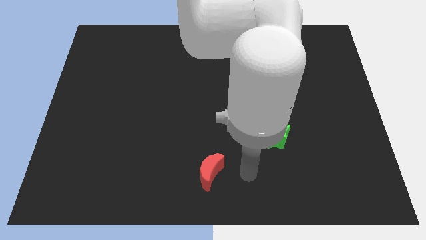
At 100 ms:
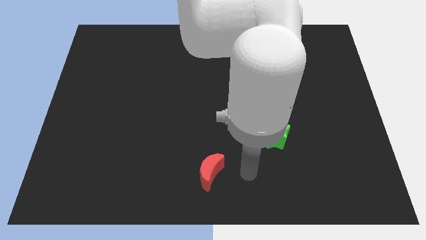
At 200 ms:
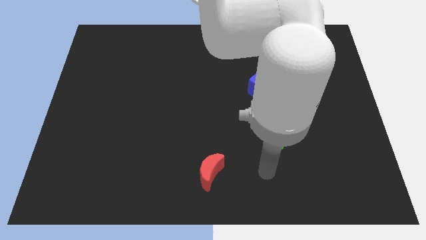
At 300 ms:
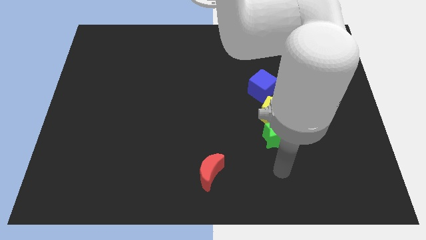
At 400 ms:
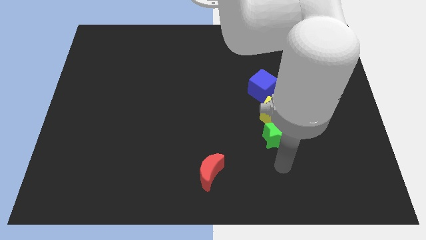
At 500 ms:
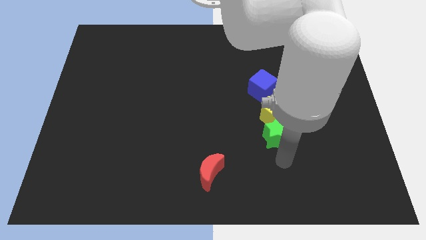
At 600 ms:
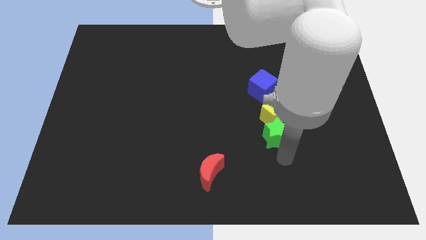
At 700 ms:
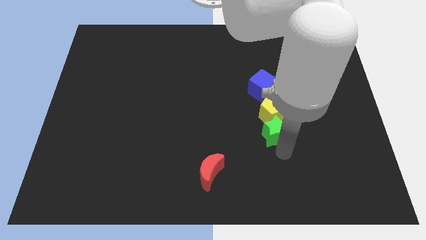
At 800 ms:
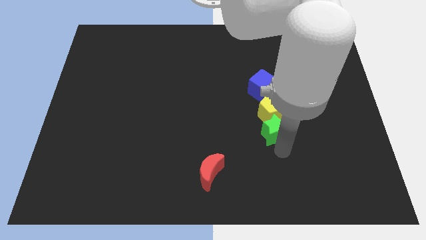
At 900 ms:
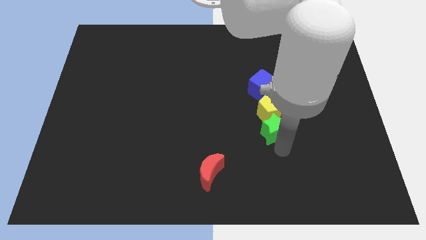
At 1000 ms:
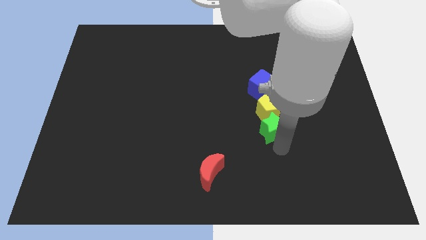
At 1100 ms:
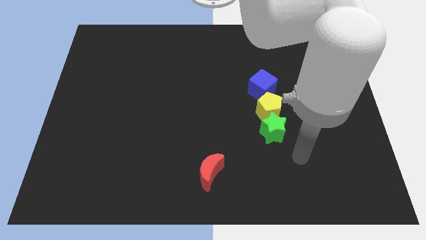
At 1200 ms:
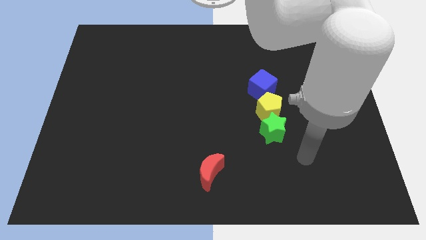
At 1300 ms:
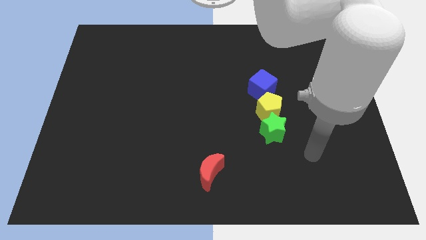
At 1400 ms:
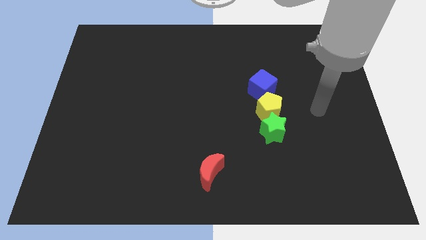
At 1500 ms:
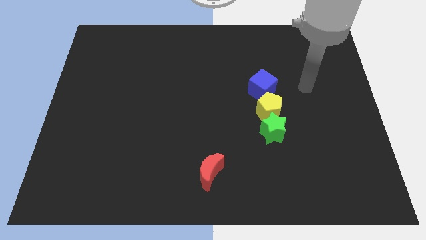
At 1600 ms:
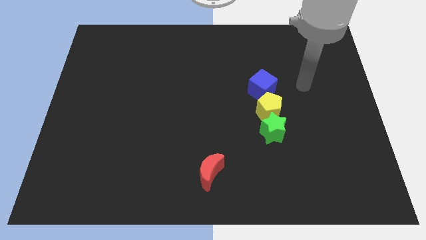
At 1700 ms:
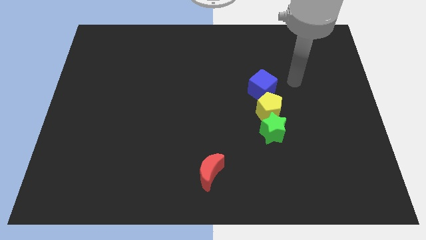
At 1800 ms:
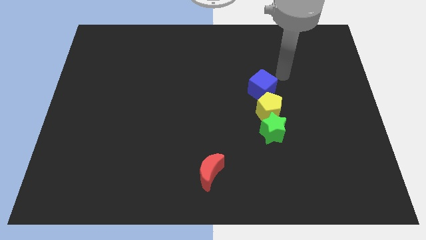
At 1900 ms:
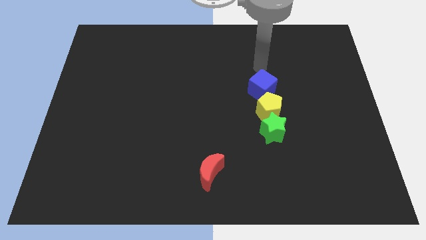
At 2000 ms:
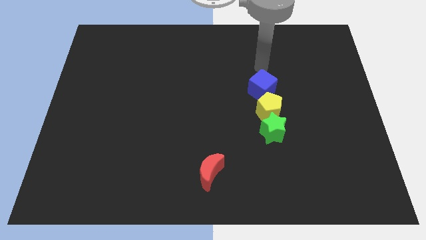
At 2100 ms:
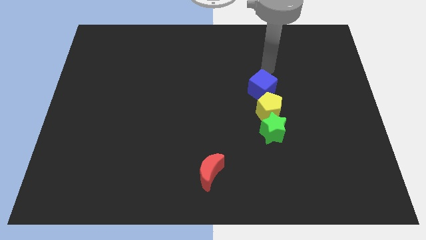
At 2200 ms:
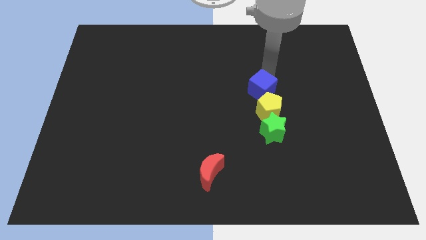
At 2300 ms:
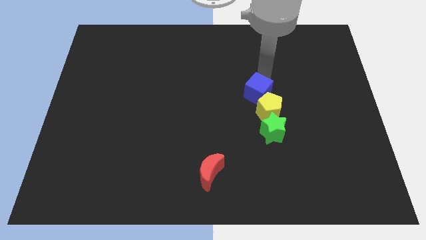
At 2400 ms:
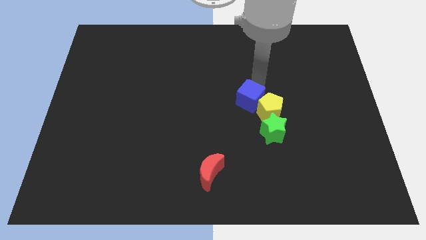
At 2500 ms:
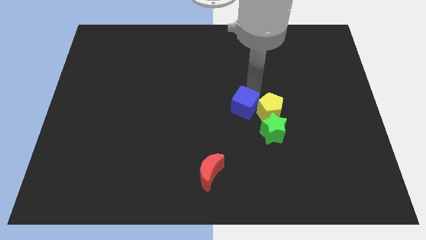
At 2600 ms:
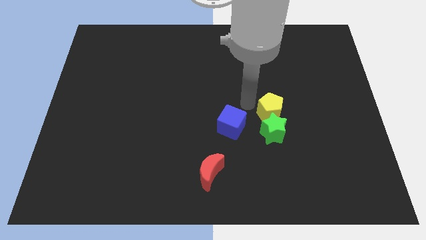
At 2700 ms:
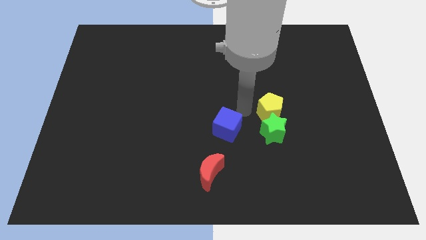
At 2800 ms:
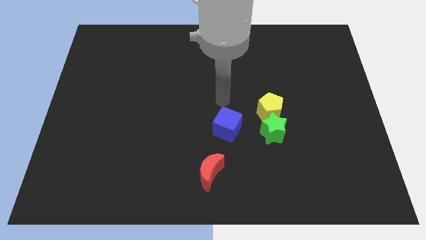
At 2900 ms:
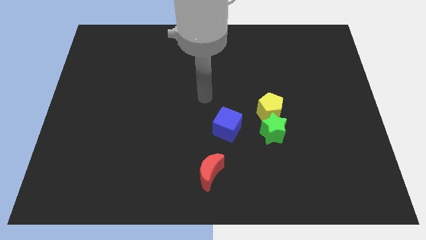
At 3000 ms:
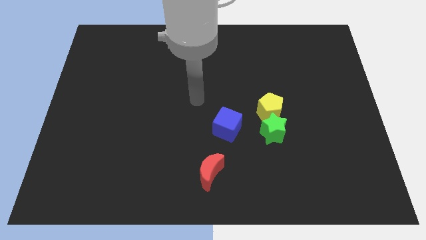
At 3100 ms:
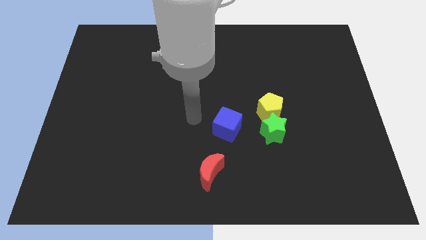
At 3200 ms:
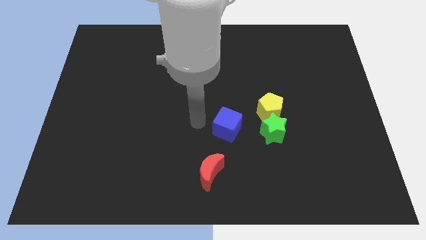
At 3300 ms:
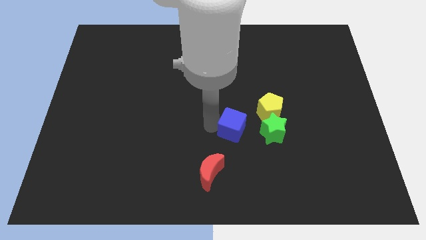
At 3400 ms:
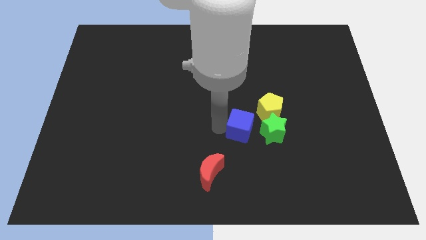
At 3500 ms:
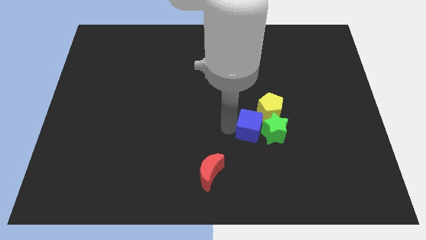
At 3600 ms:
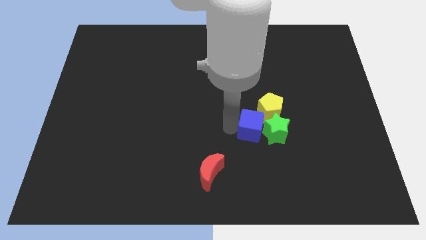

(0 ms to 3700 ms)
move the blue cube next to the green block

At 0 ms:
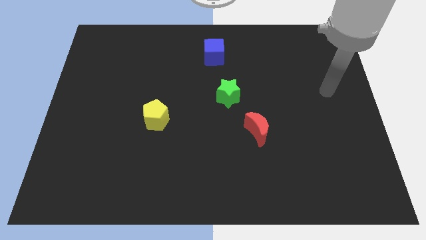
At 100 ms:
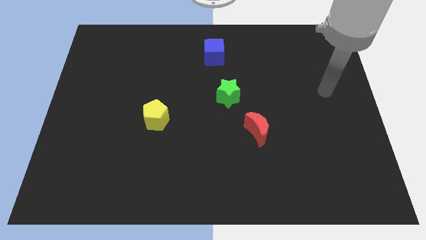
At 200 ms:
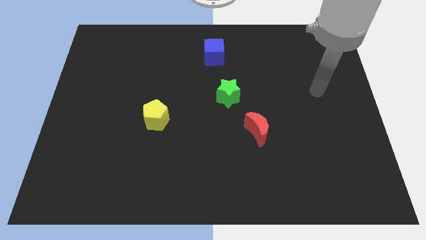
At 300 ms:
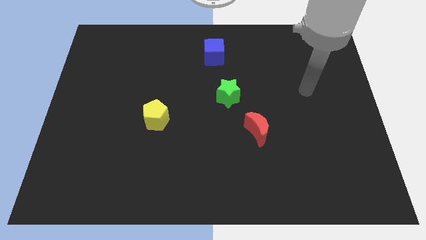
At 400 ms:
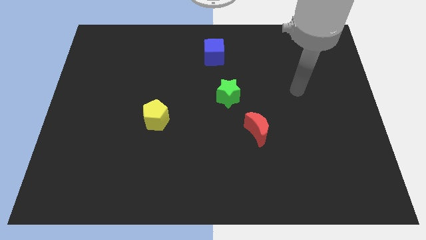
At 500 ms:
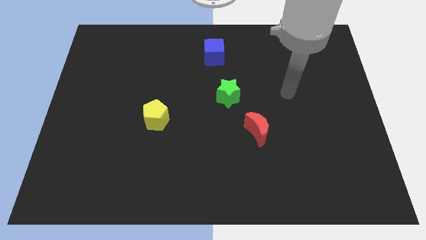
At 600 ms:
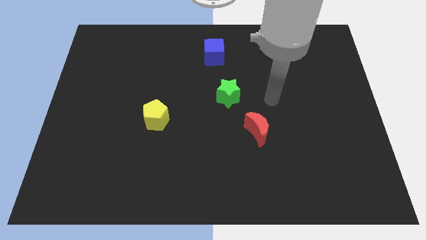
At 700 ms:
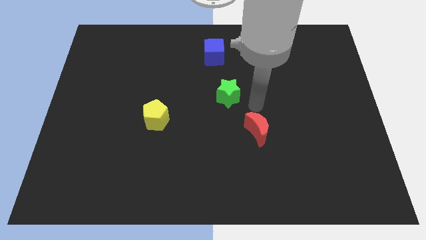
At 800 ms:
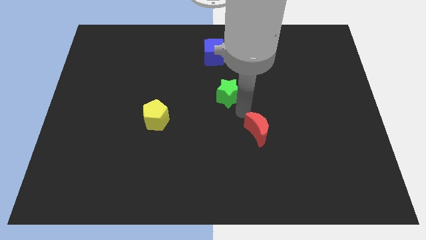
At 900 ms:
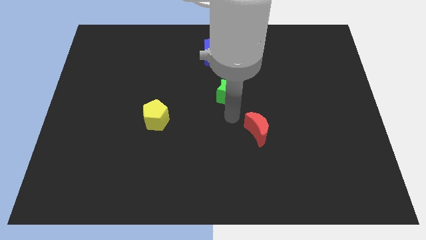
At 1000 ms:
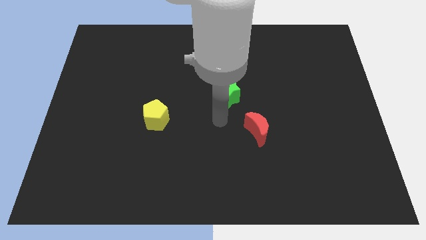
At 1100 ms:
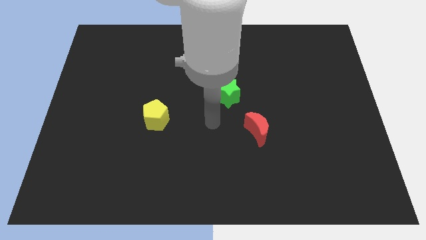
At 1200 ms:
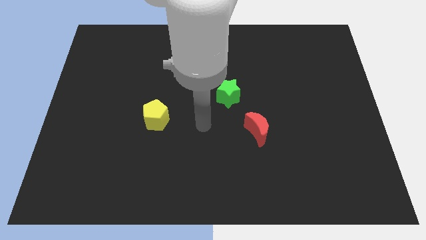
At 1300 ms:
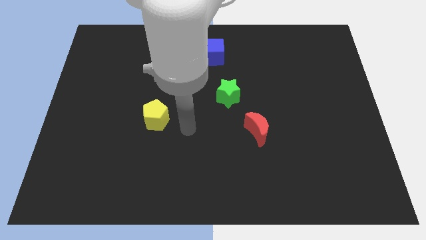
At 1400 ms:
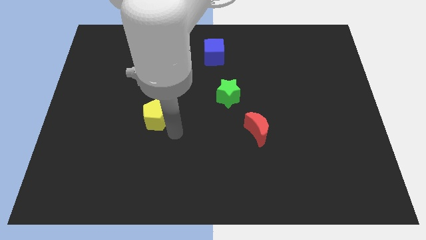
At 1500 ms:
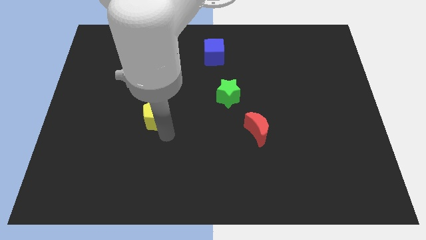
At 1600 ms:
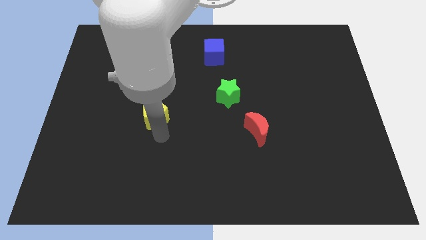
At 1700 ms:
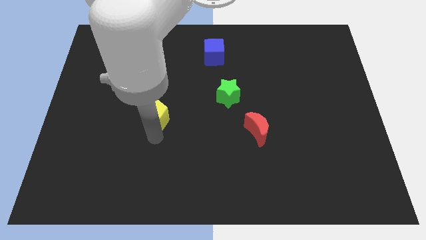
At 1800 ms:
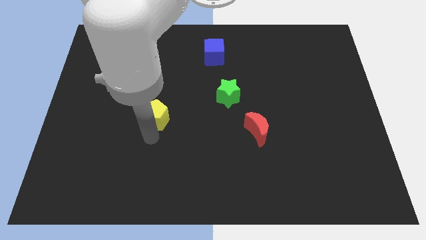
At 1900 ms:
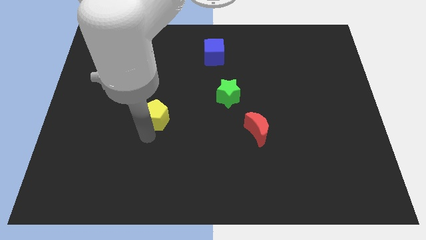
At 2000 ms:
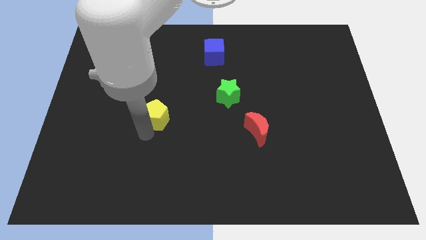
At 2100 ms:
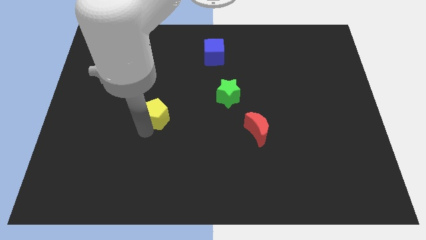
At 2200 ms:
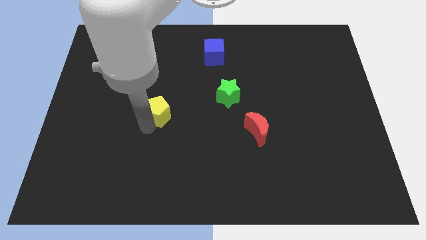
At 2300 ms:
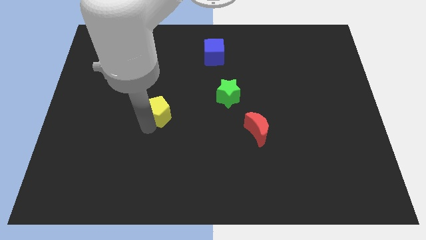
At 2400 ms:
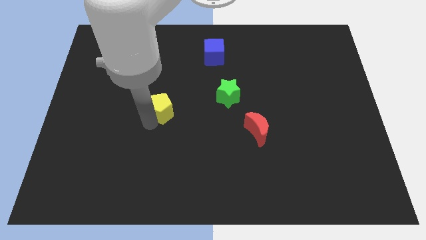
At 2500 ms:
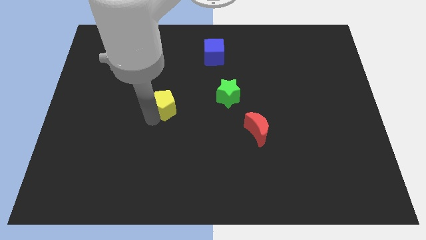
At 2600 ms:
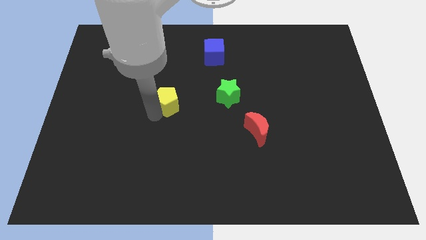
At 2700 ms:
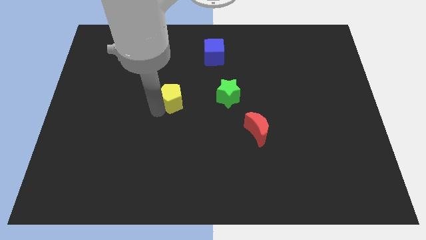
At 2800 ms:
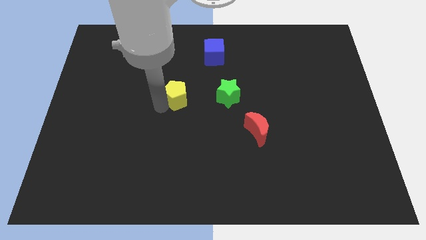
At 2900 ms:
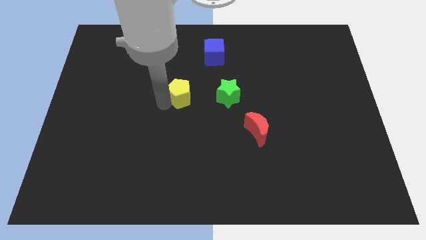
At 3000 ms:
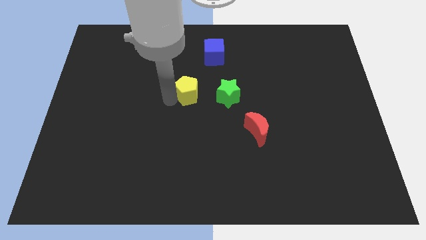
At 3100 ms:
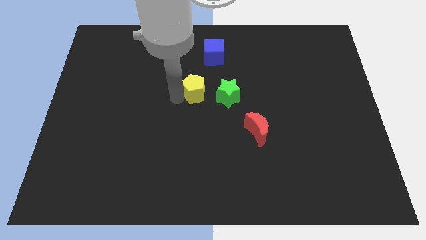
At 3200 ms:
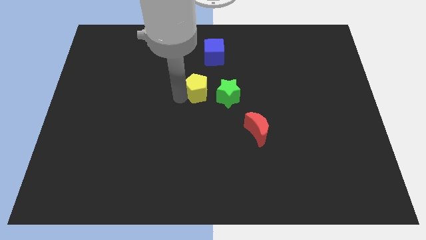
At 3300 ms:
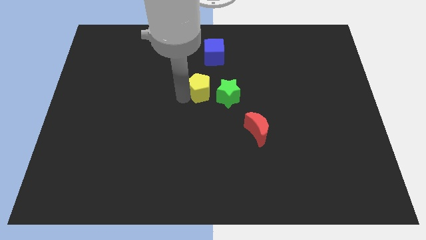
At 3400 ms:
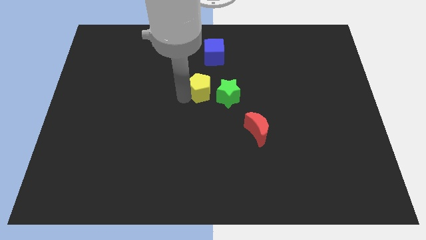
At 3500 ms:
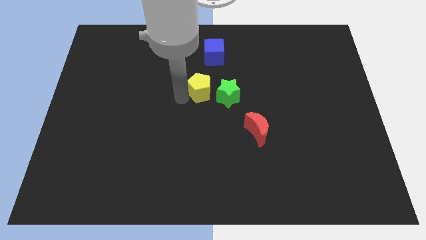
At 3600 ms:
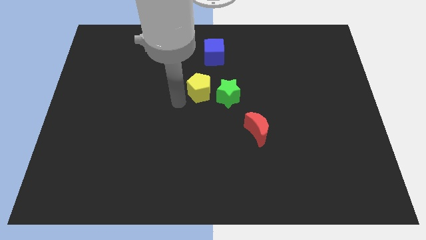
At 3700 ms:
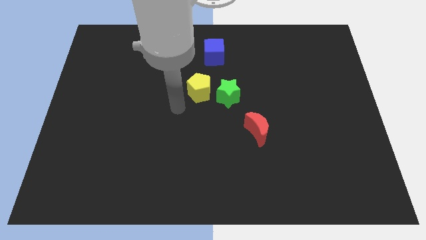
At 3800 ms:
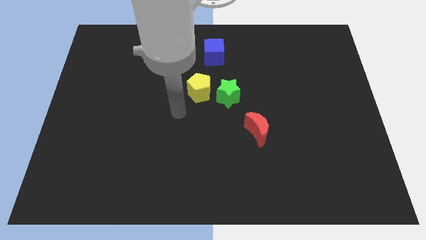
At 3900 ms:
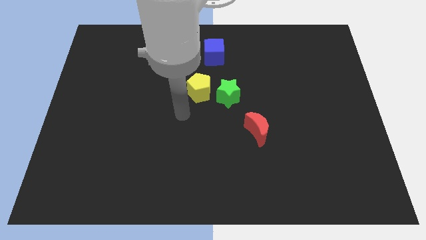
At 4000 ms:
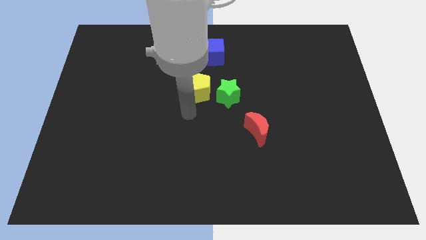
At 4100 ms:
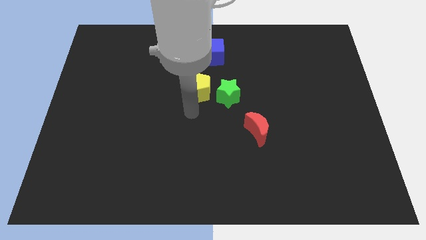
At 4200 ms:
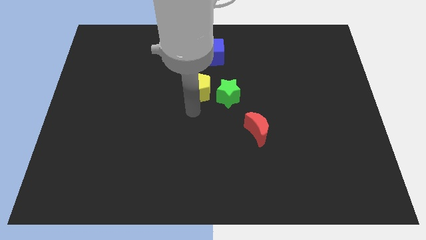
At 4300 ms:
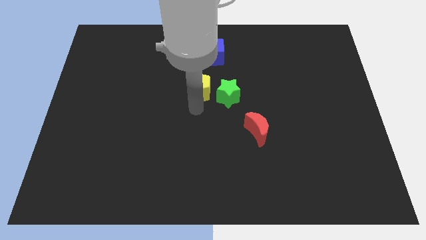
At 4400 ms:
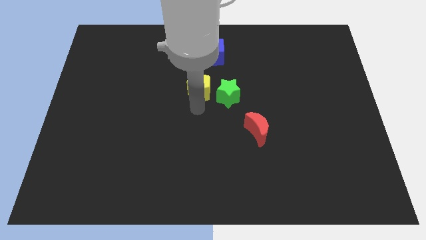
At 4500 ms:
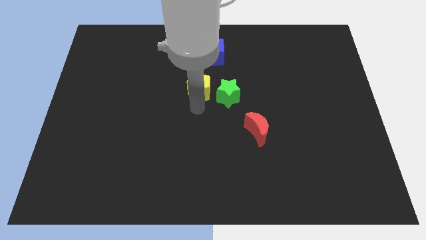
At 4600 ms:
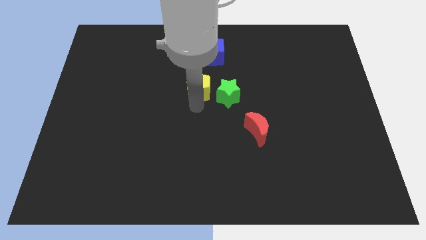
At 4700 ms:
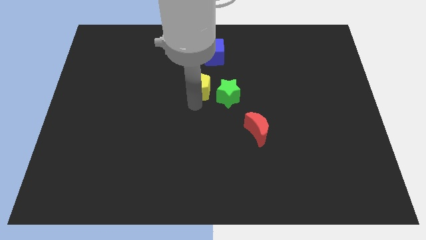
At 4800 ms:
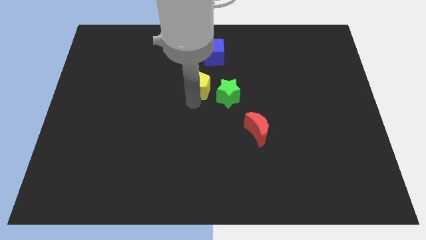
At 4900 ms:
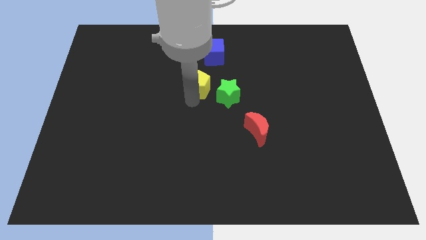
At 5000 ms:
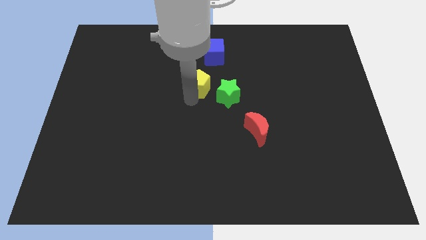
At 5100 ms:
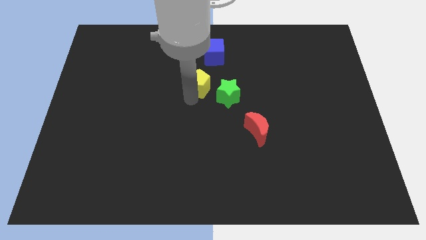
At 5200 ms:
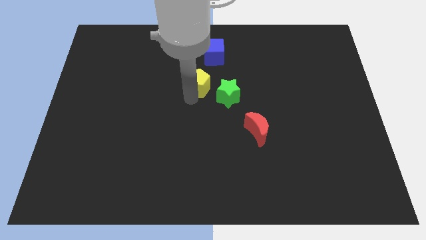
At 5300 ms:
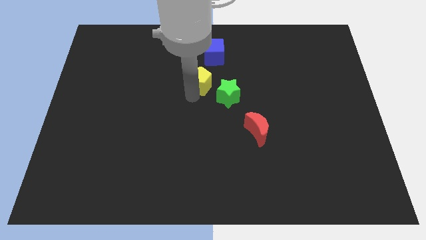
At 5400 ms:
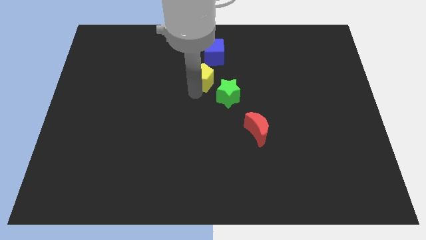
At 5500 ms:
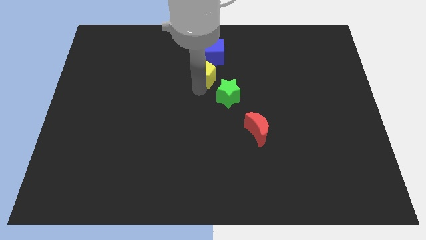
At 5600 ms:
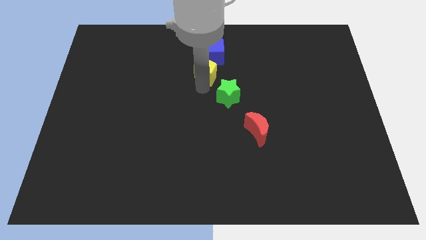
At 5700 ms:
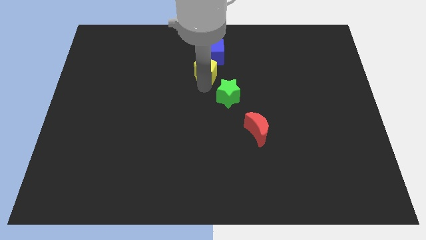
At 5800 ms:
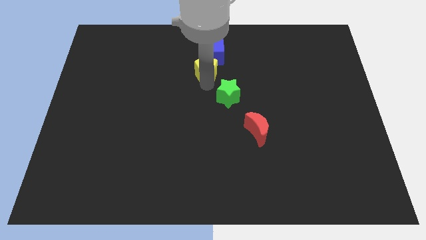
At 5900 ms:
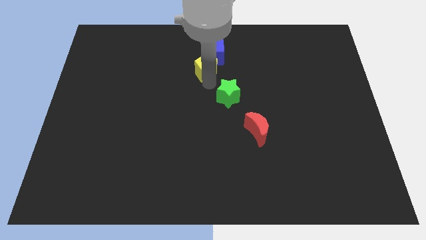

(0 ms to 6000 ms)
slide the yellow block close to the blue block
